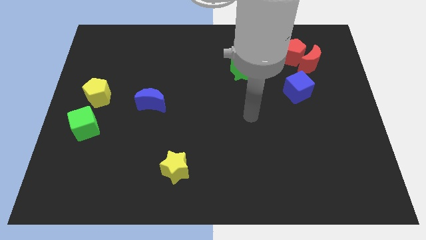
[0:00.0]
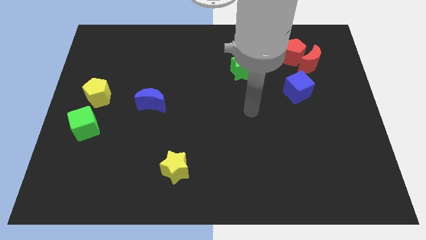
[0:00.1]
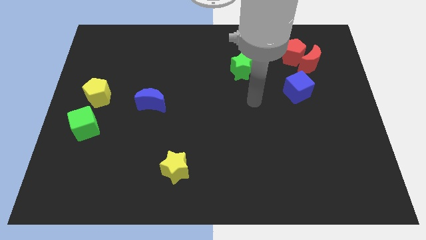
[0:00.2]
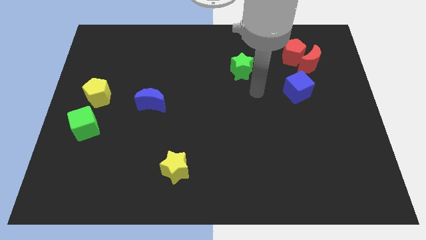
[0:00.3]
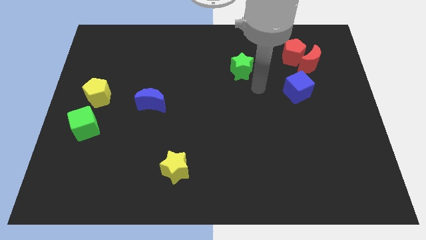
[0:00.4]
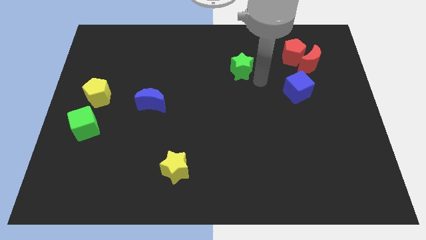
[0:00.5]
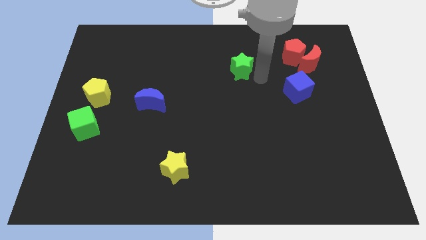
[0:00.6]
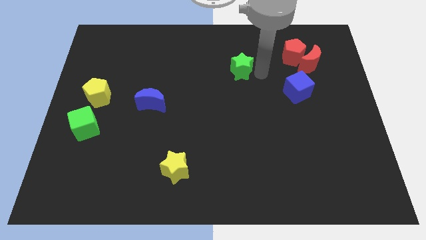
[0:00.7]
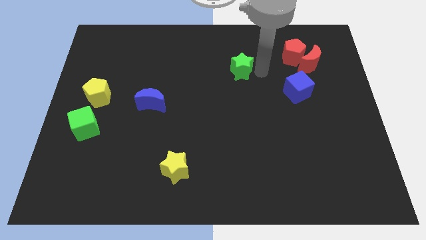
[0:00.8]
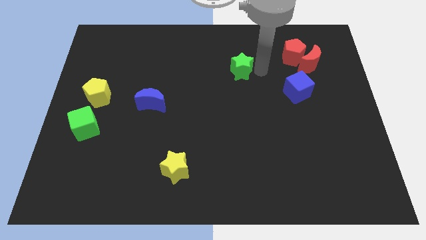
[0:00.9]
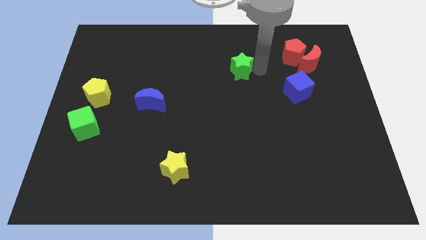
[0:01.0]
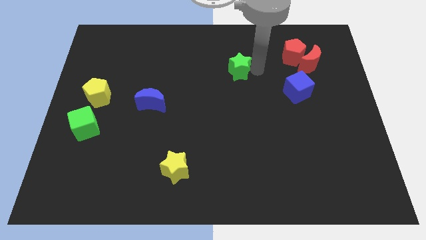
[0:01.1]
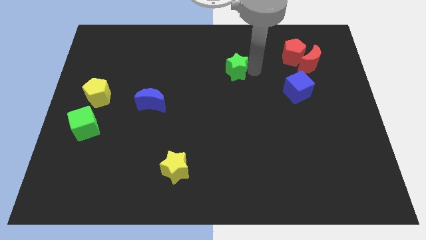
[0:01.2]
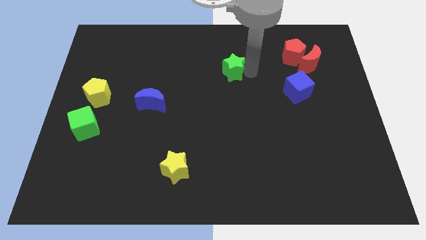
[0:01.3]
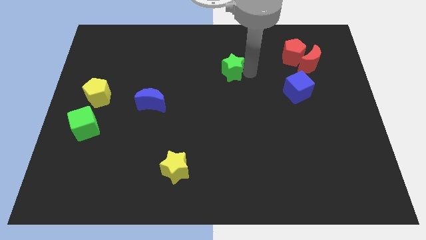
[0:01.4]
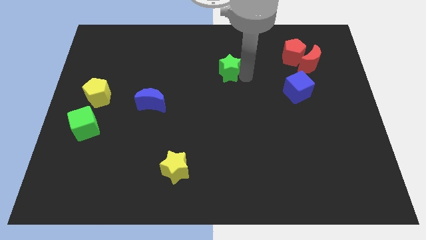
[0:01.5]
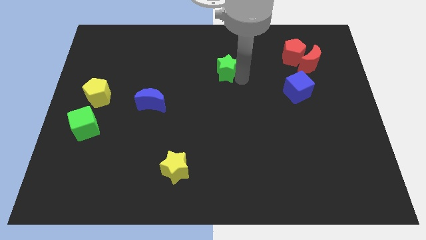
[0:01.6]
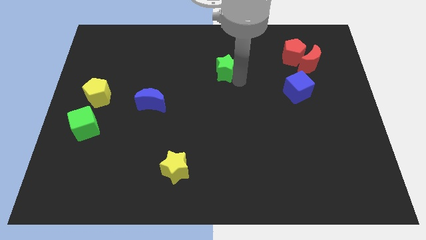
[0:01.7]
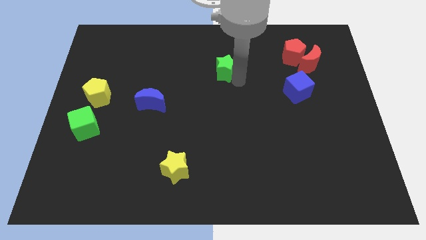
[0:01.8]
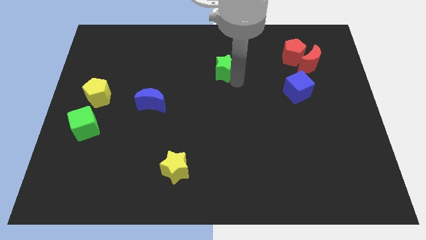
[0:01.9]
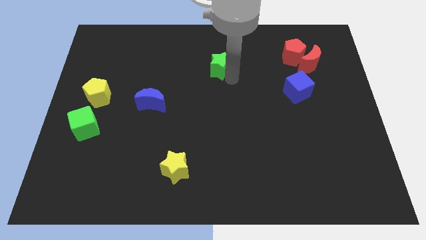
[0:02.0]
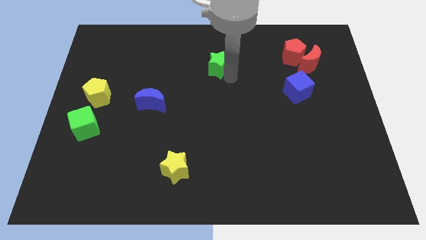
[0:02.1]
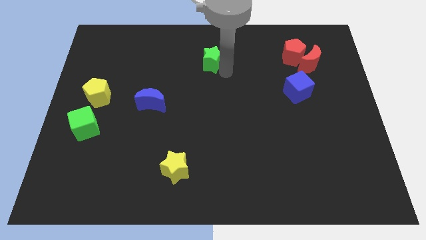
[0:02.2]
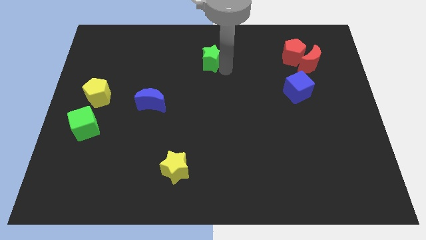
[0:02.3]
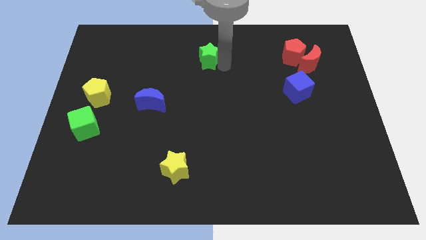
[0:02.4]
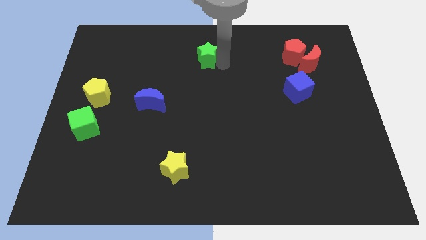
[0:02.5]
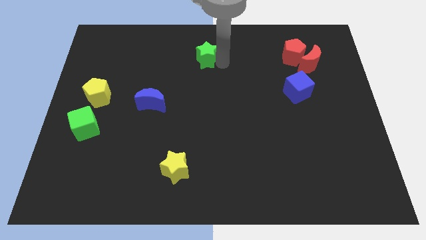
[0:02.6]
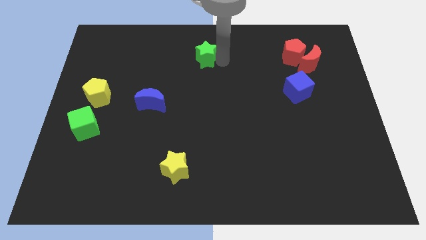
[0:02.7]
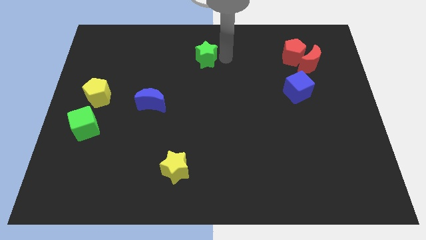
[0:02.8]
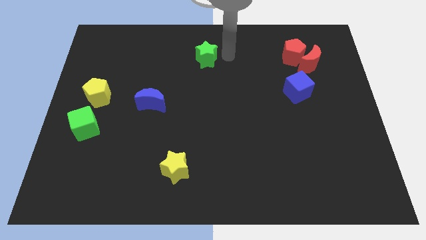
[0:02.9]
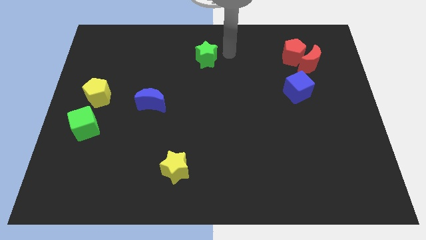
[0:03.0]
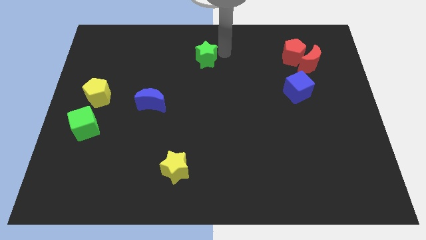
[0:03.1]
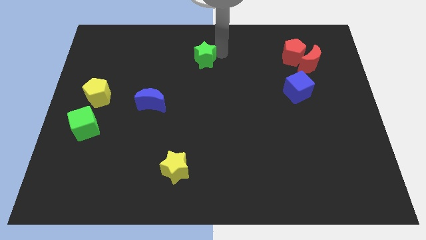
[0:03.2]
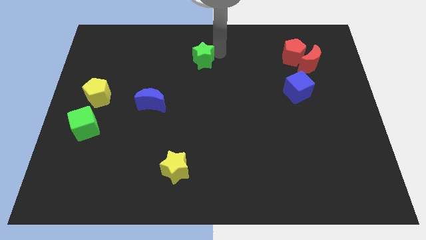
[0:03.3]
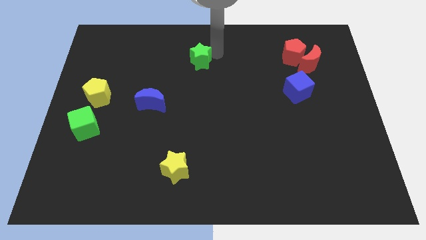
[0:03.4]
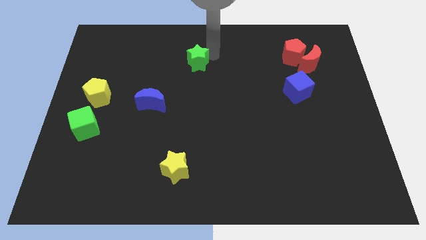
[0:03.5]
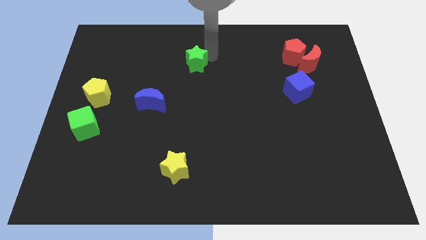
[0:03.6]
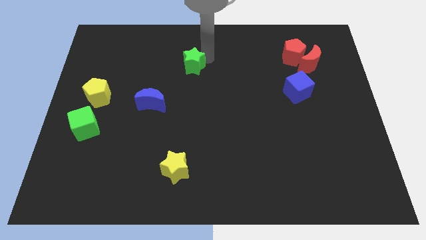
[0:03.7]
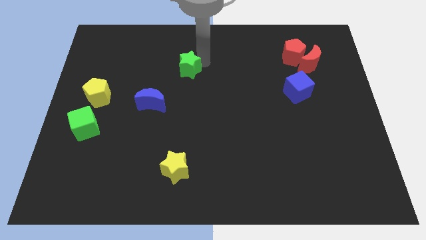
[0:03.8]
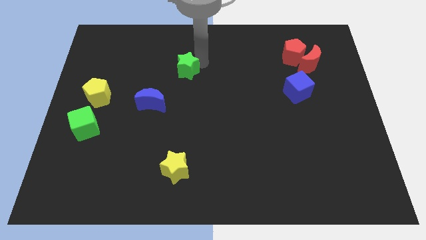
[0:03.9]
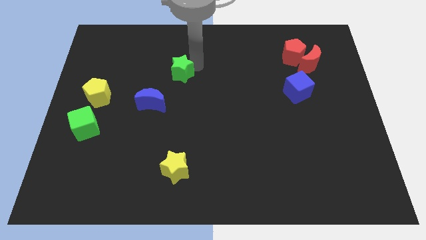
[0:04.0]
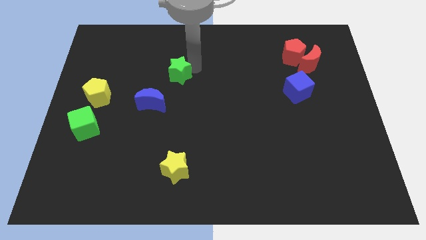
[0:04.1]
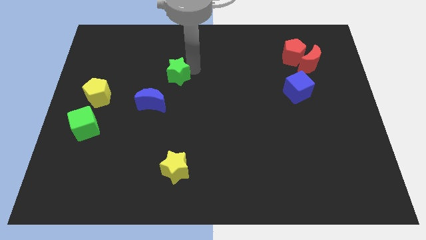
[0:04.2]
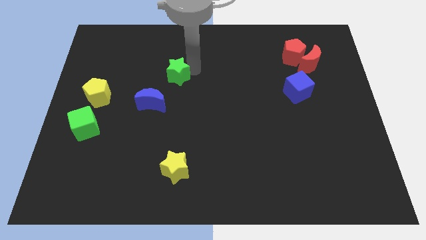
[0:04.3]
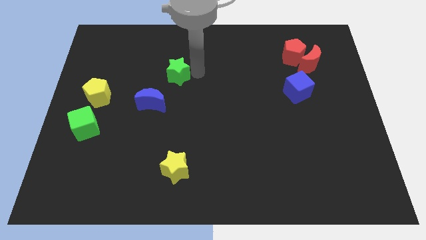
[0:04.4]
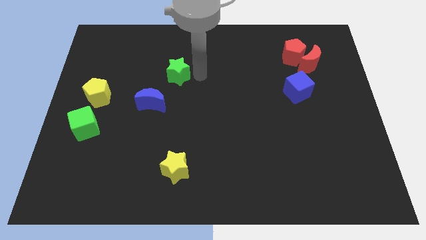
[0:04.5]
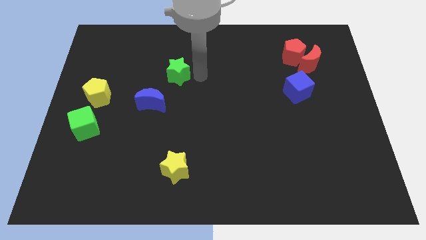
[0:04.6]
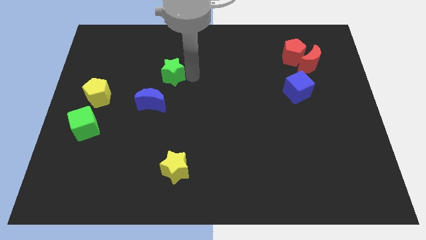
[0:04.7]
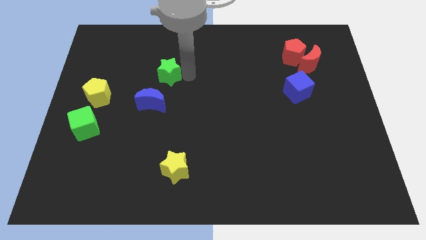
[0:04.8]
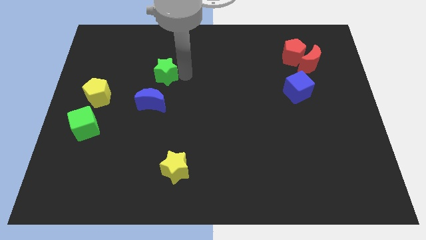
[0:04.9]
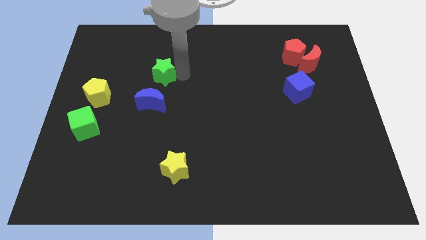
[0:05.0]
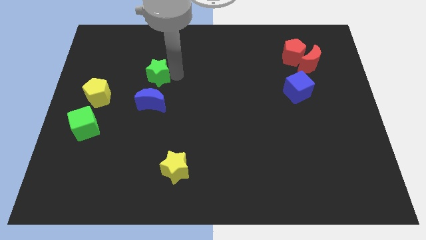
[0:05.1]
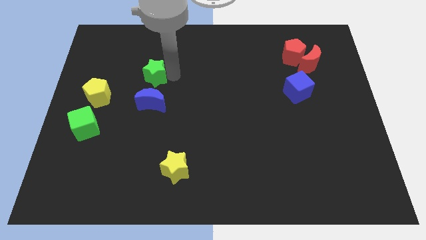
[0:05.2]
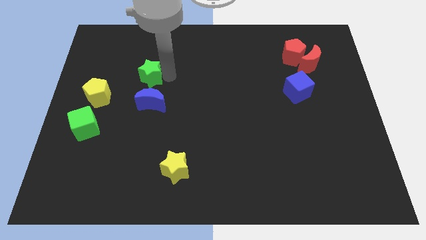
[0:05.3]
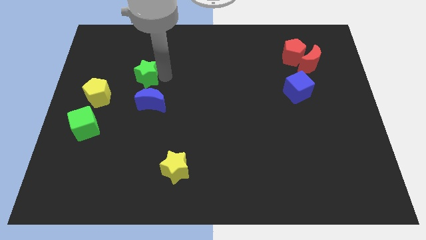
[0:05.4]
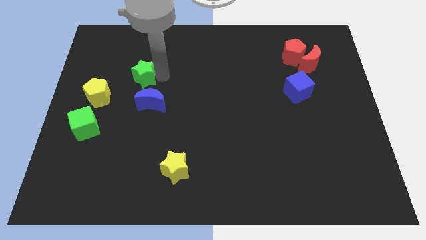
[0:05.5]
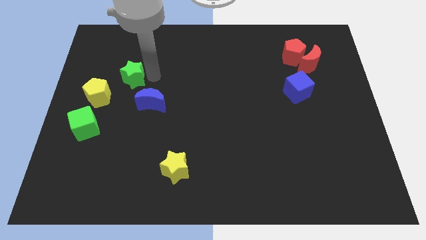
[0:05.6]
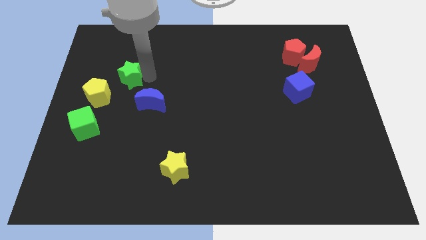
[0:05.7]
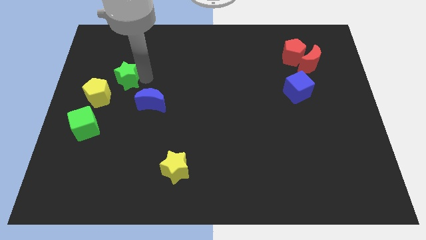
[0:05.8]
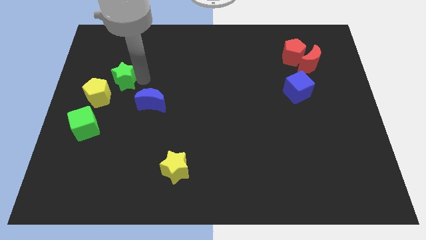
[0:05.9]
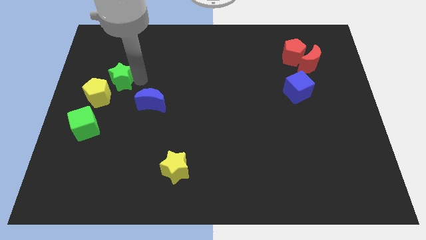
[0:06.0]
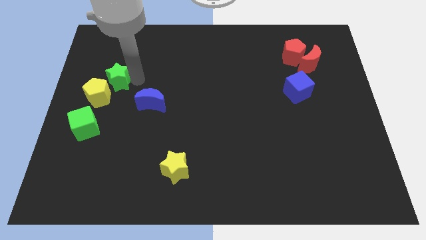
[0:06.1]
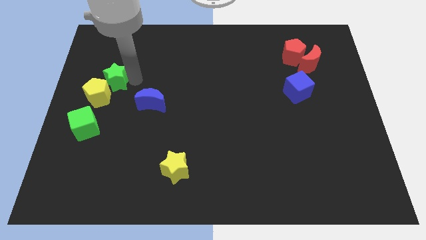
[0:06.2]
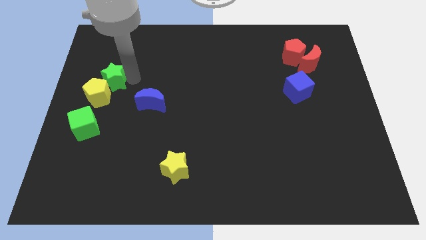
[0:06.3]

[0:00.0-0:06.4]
push the green star towards the yellow pentagon

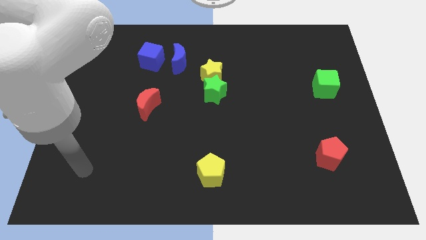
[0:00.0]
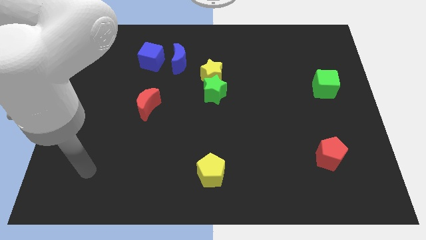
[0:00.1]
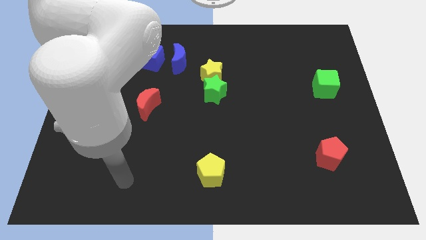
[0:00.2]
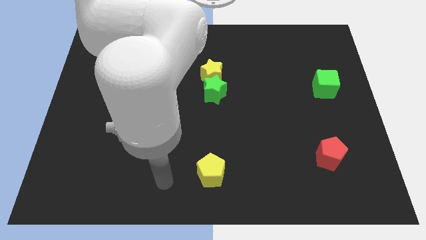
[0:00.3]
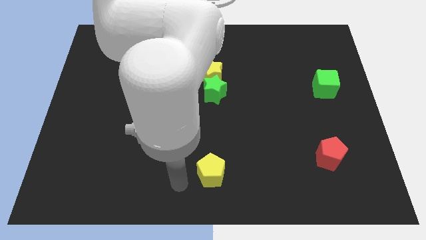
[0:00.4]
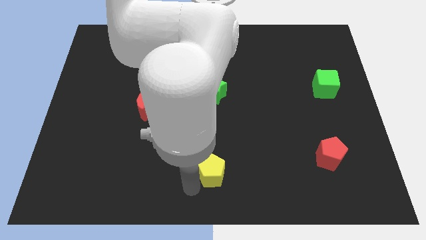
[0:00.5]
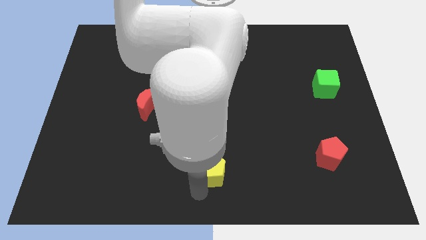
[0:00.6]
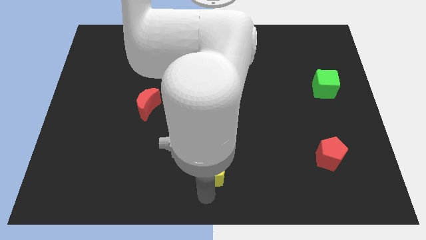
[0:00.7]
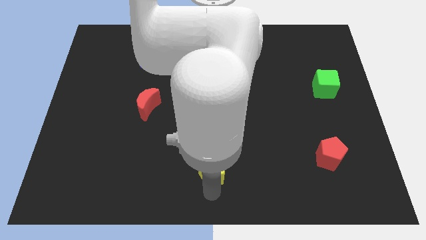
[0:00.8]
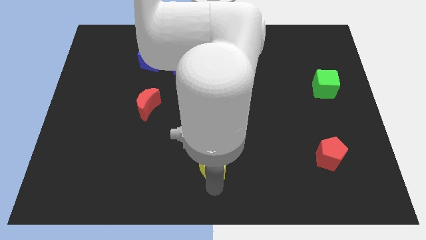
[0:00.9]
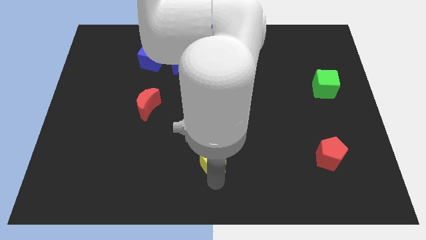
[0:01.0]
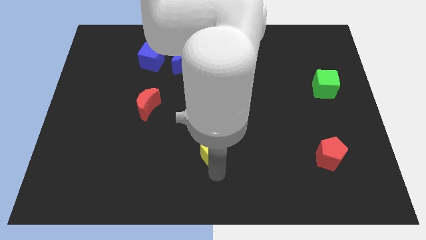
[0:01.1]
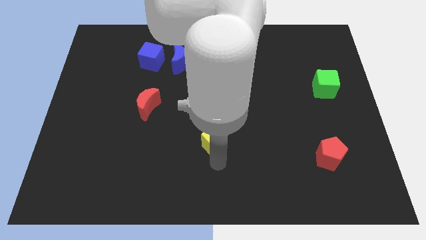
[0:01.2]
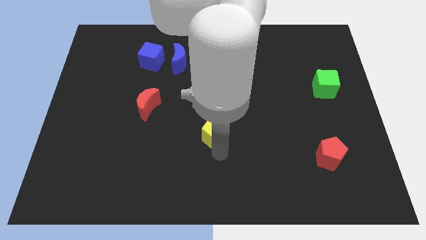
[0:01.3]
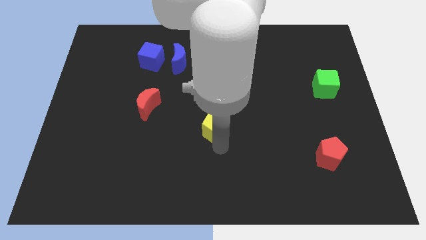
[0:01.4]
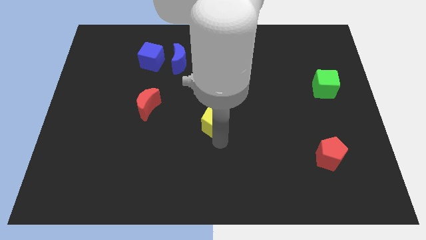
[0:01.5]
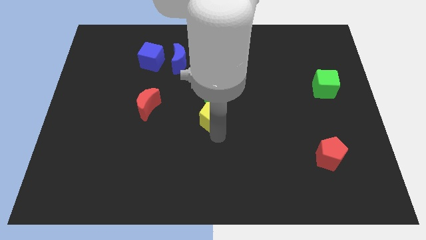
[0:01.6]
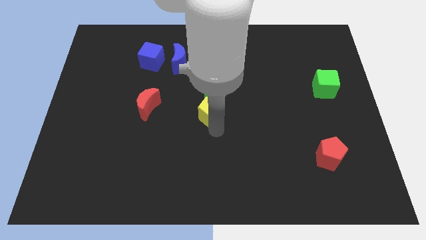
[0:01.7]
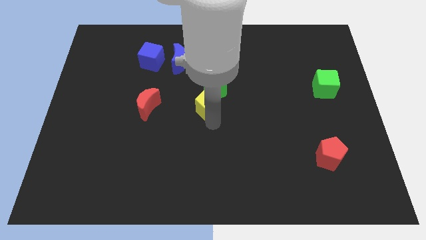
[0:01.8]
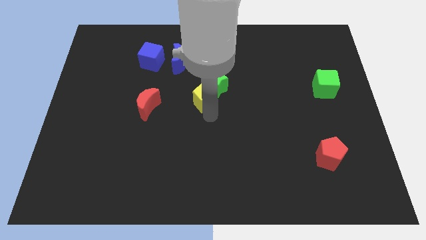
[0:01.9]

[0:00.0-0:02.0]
push the yellow pentagon towards the green star
